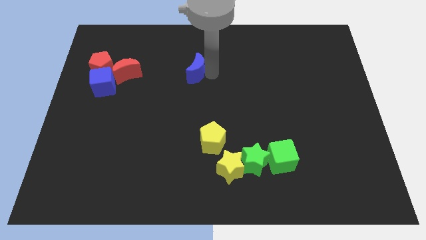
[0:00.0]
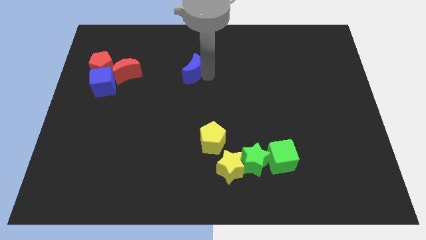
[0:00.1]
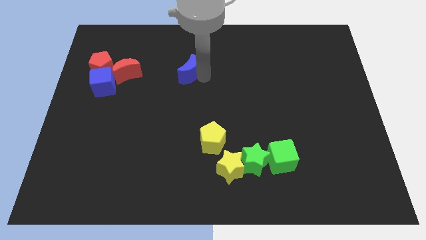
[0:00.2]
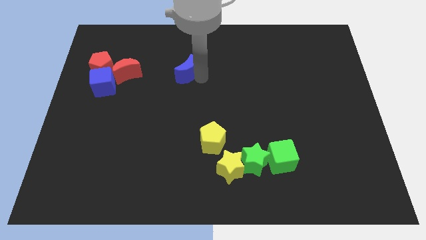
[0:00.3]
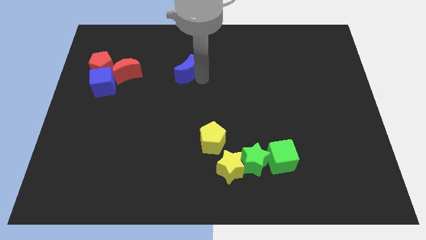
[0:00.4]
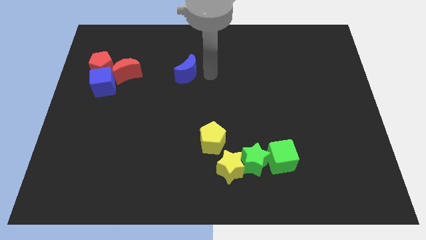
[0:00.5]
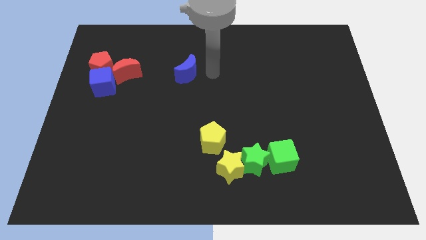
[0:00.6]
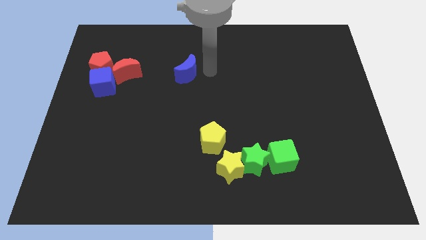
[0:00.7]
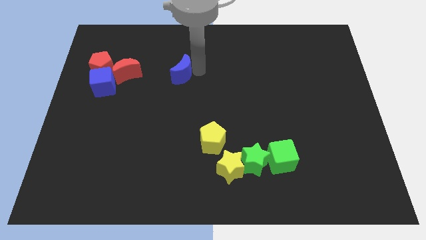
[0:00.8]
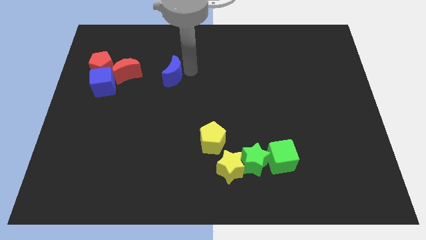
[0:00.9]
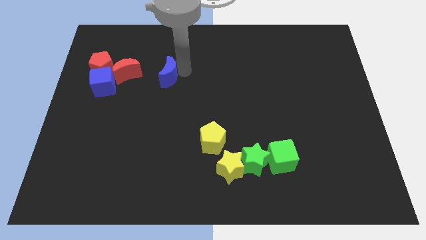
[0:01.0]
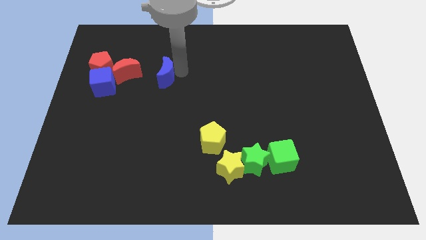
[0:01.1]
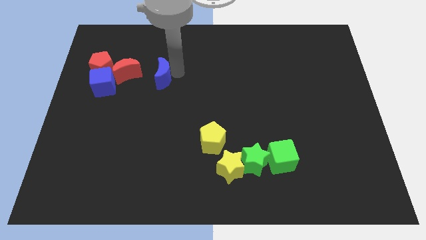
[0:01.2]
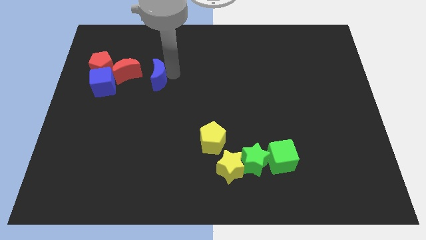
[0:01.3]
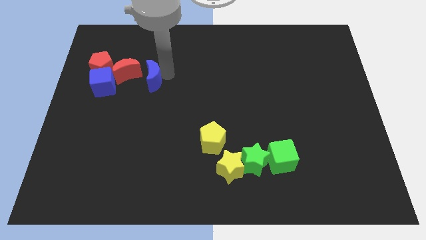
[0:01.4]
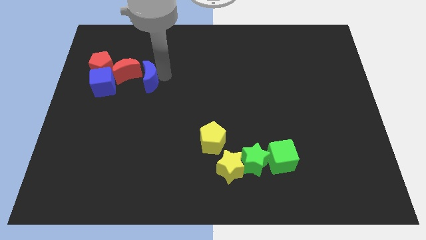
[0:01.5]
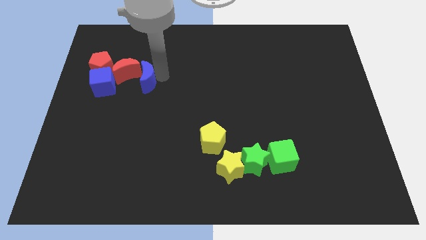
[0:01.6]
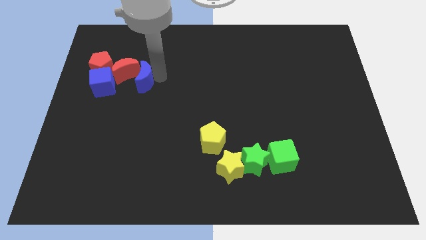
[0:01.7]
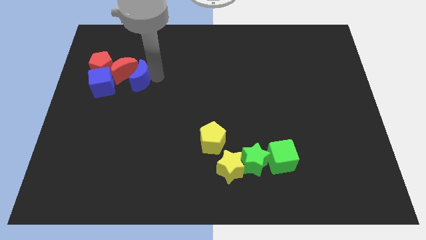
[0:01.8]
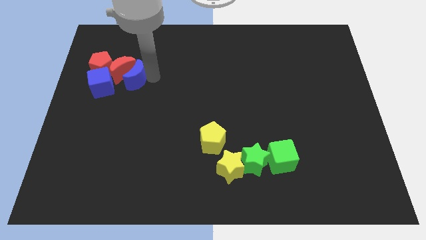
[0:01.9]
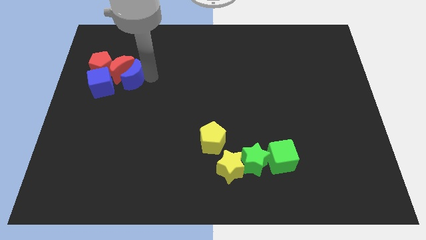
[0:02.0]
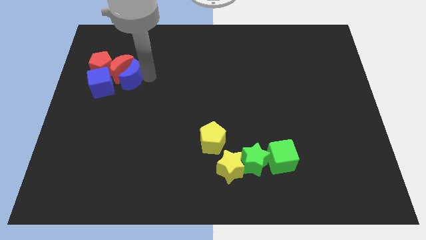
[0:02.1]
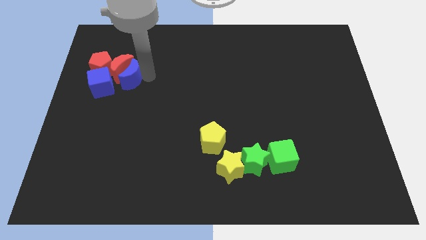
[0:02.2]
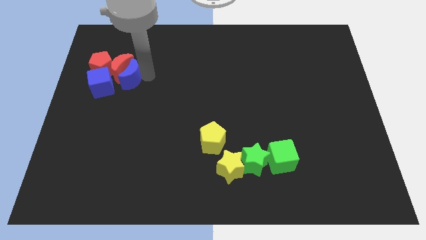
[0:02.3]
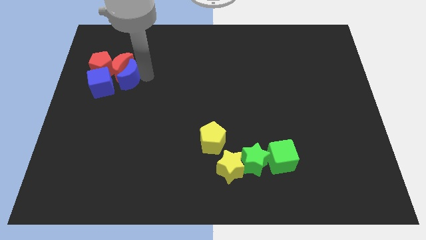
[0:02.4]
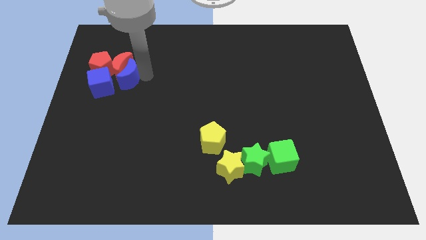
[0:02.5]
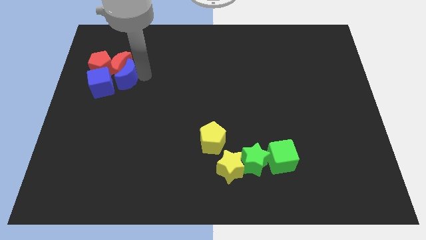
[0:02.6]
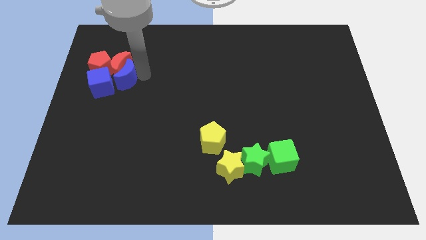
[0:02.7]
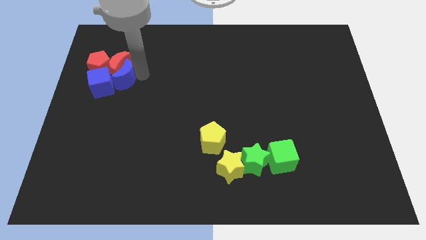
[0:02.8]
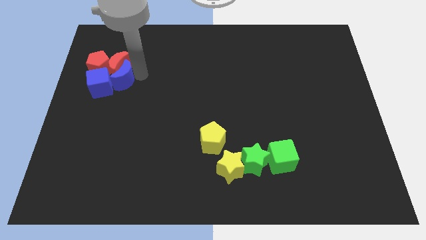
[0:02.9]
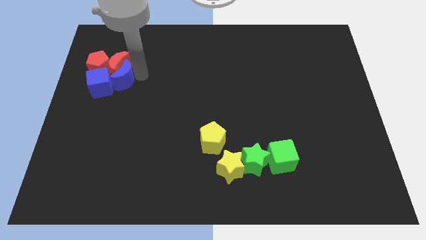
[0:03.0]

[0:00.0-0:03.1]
move the blue crescent into the group of blocks

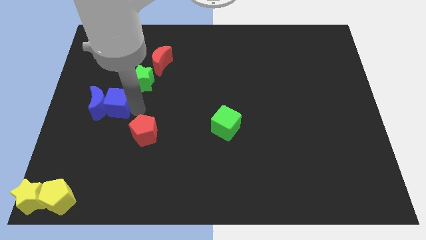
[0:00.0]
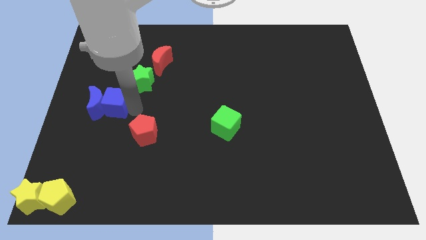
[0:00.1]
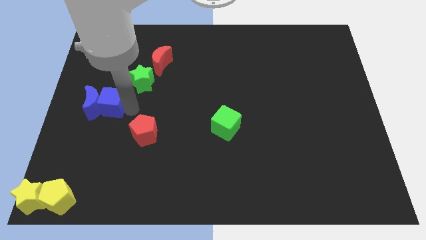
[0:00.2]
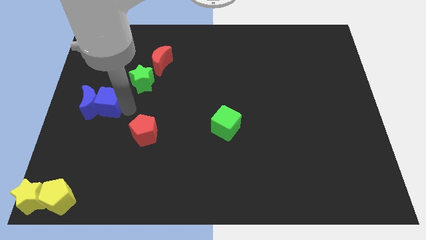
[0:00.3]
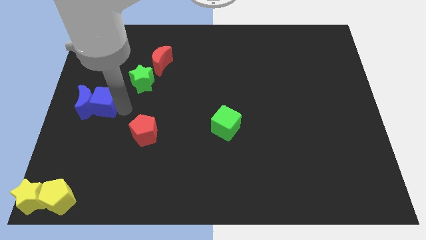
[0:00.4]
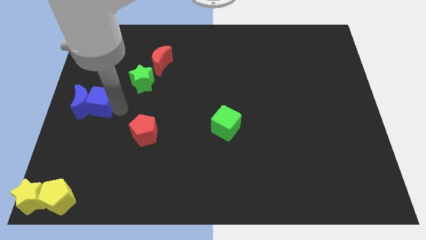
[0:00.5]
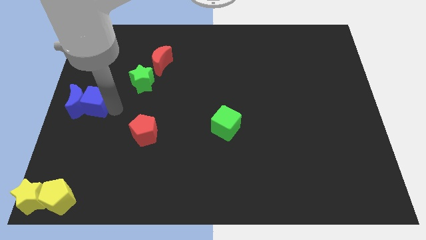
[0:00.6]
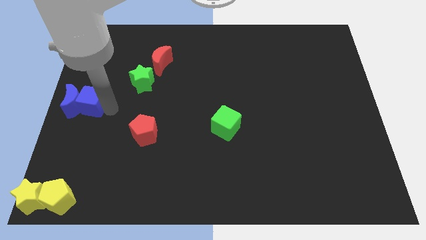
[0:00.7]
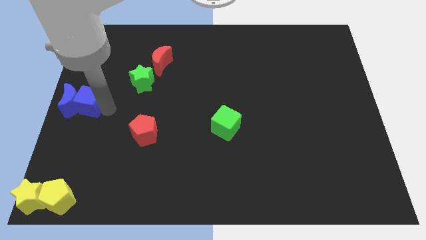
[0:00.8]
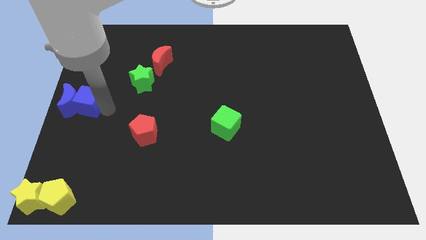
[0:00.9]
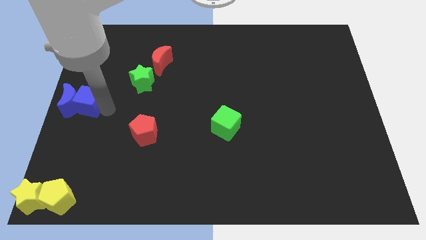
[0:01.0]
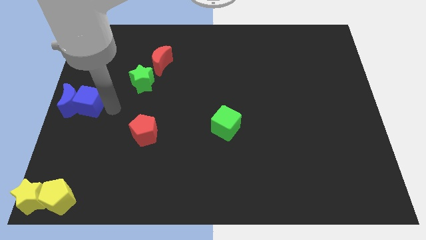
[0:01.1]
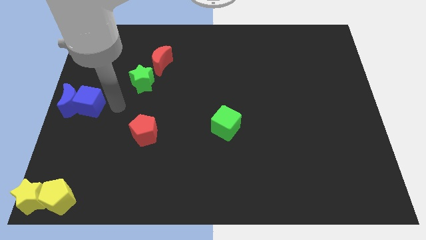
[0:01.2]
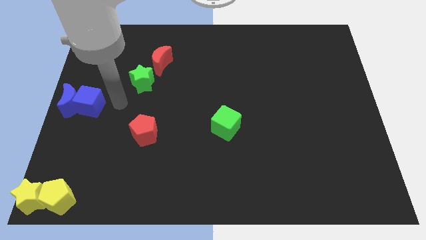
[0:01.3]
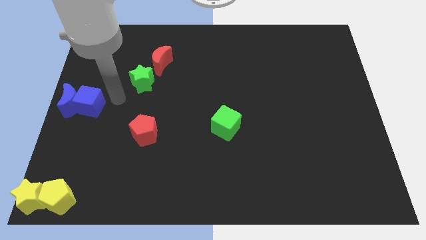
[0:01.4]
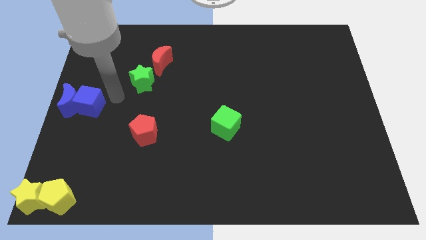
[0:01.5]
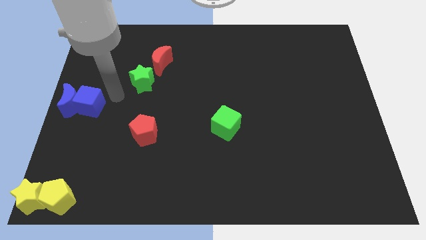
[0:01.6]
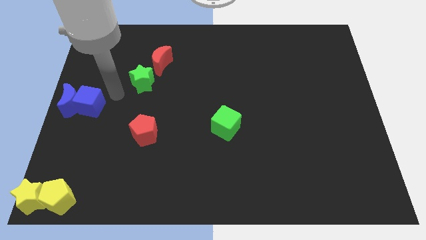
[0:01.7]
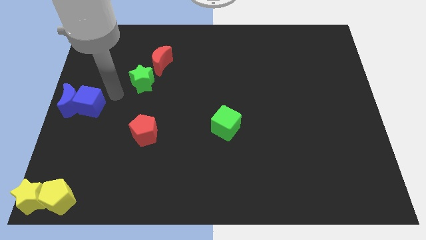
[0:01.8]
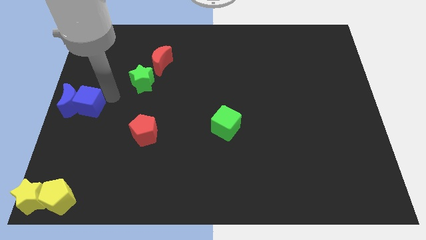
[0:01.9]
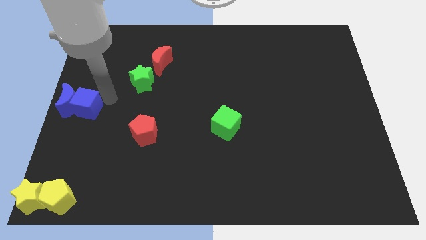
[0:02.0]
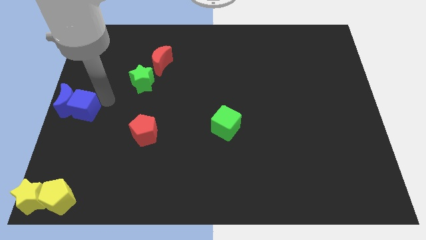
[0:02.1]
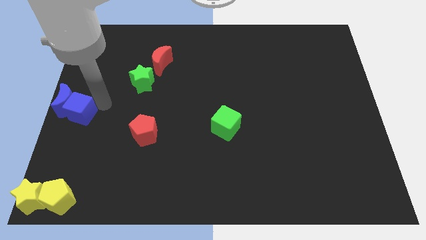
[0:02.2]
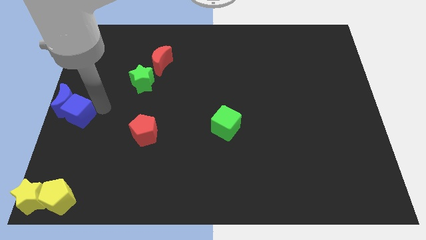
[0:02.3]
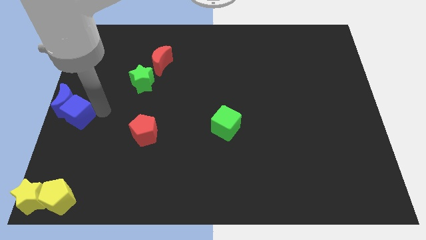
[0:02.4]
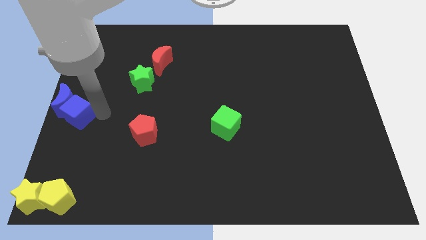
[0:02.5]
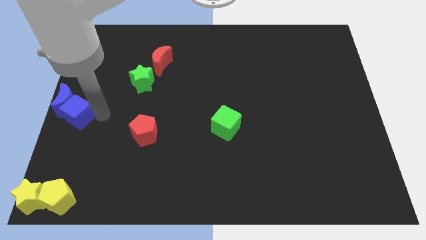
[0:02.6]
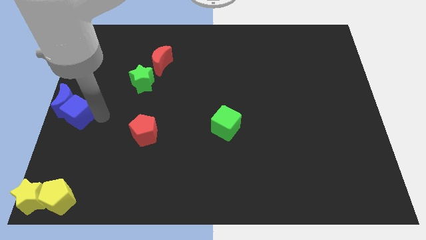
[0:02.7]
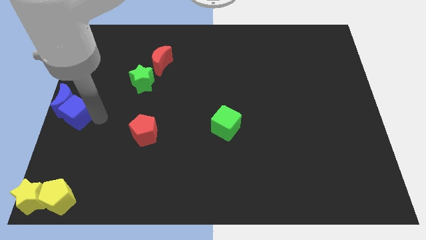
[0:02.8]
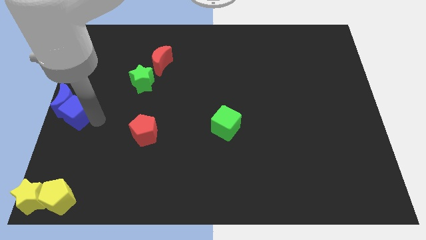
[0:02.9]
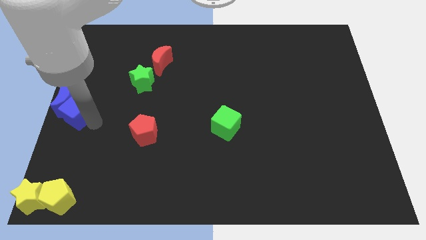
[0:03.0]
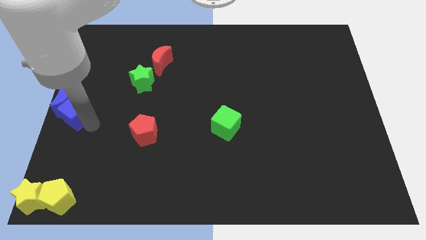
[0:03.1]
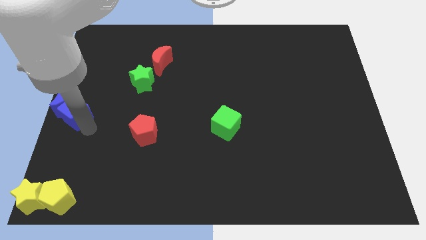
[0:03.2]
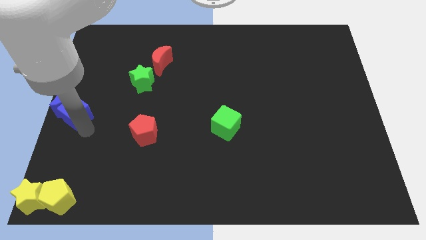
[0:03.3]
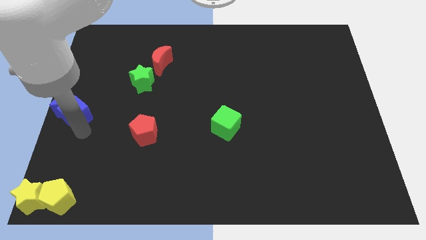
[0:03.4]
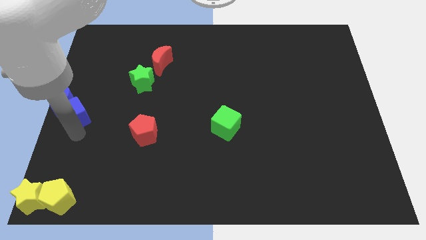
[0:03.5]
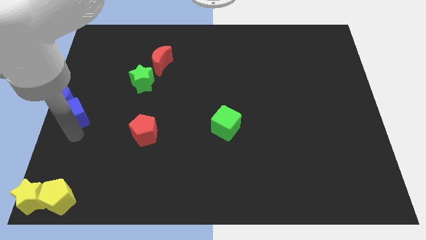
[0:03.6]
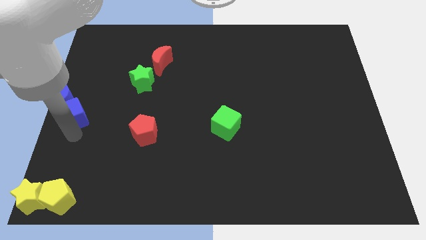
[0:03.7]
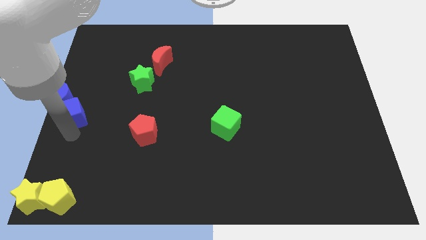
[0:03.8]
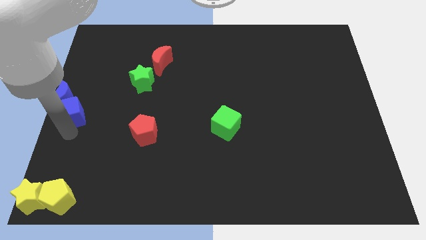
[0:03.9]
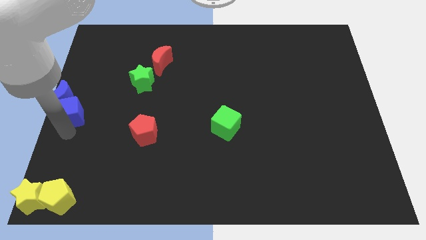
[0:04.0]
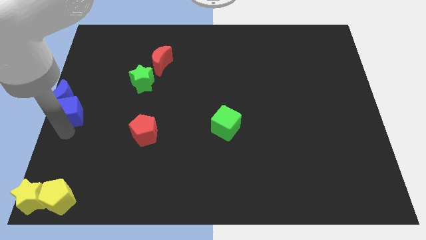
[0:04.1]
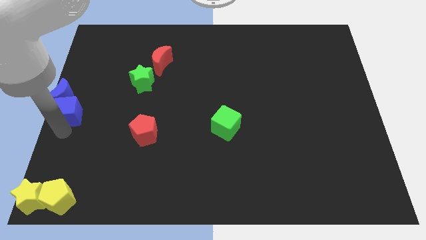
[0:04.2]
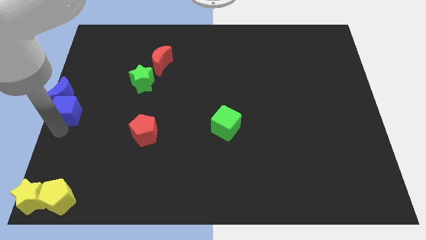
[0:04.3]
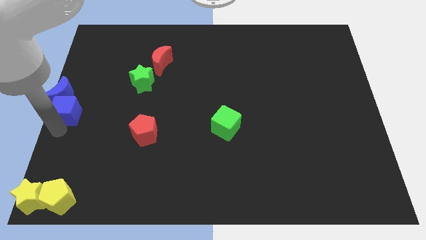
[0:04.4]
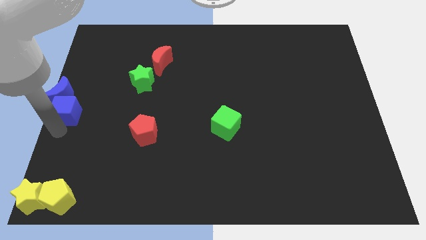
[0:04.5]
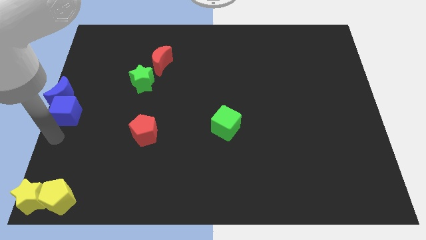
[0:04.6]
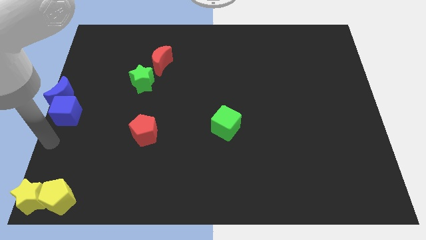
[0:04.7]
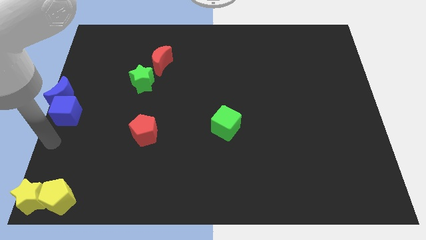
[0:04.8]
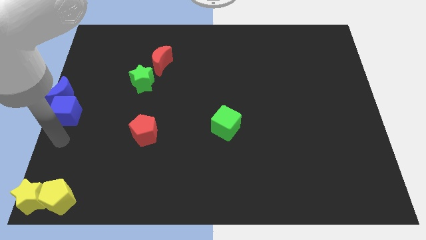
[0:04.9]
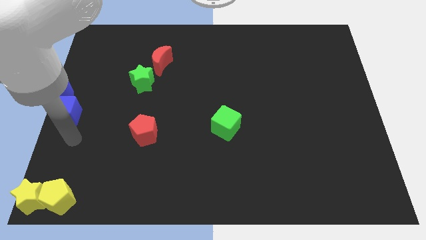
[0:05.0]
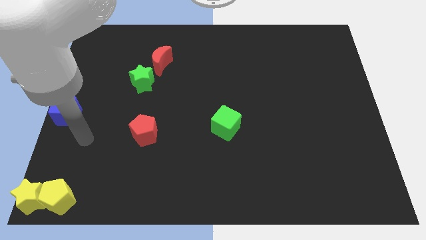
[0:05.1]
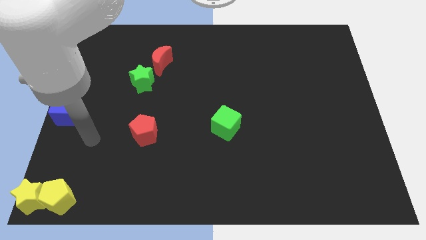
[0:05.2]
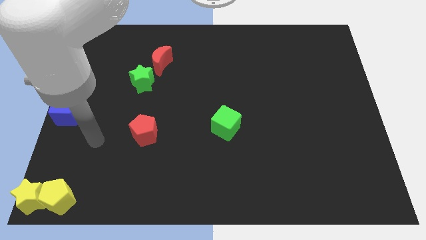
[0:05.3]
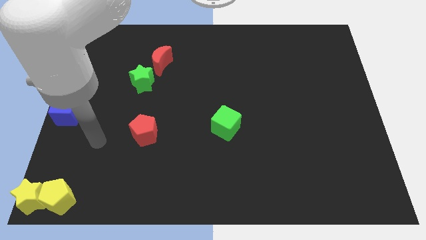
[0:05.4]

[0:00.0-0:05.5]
place the group of blue blocks at the center left of the board

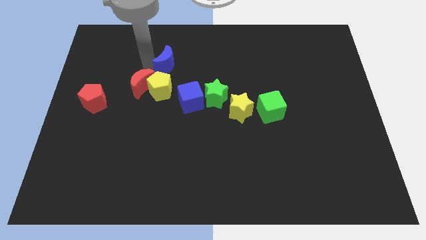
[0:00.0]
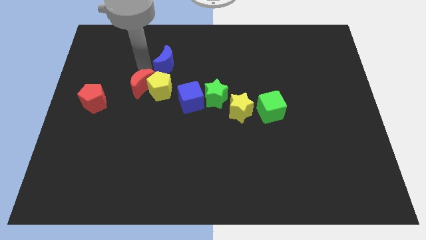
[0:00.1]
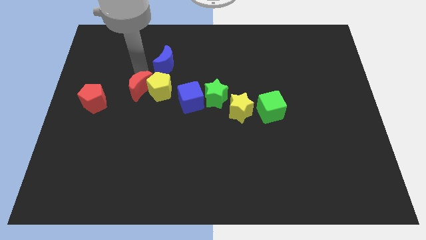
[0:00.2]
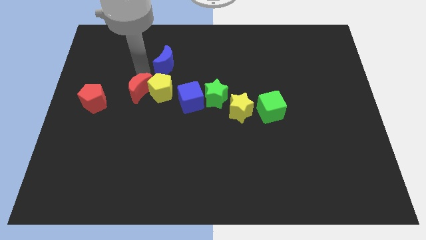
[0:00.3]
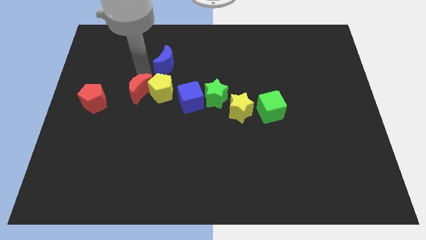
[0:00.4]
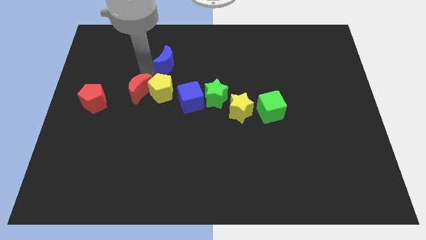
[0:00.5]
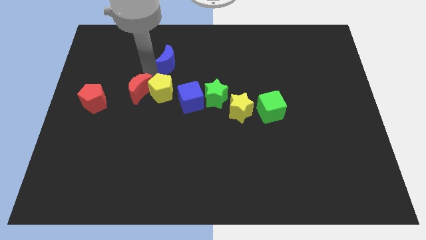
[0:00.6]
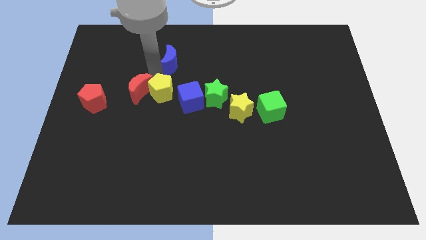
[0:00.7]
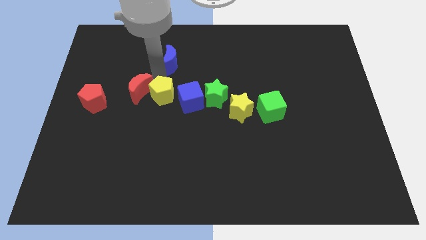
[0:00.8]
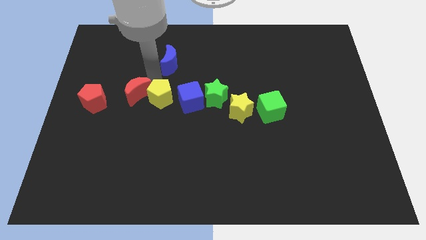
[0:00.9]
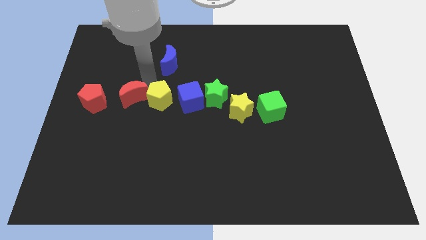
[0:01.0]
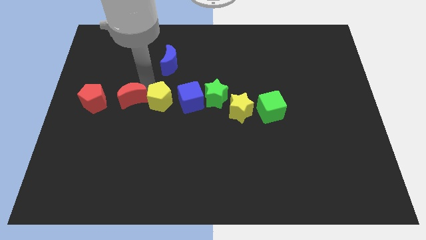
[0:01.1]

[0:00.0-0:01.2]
push yellow pentagon and red moon slightly down
